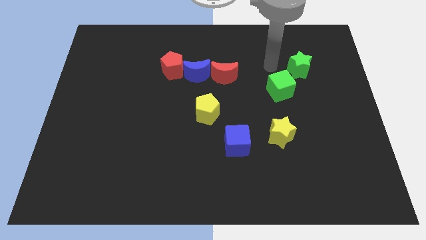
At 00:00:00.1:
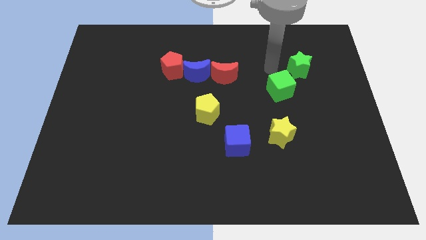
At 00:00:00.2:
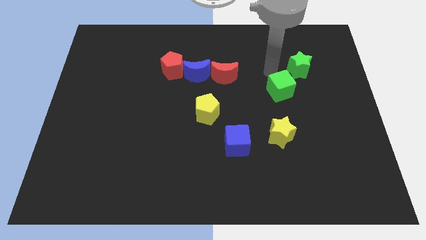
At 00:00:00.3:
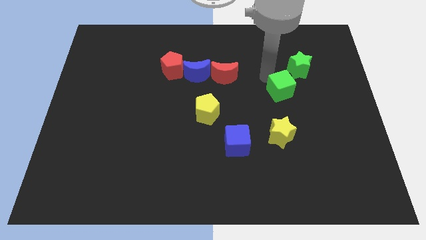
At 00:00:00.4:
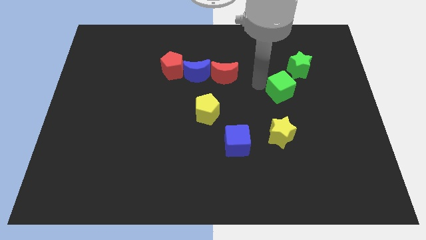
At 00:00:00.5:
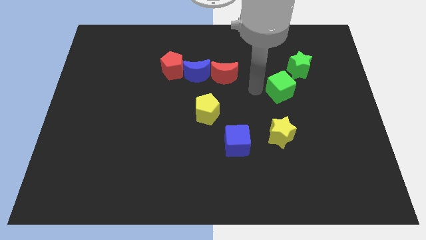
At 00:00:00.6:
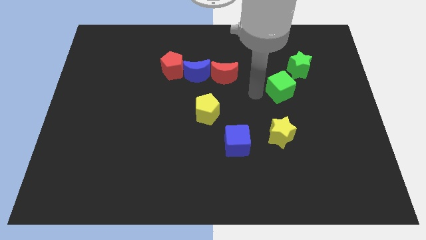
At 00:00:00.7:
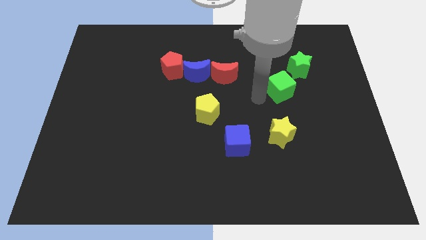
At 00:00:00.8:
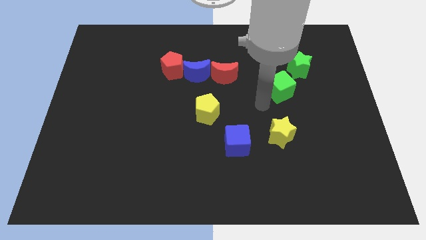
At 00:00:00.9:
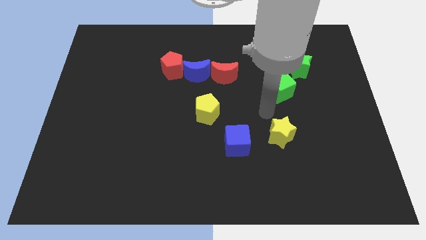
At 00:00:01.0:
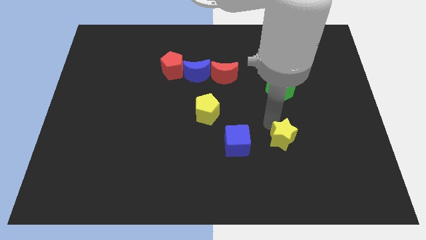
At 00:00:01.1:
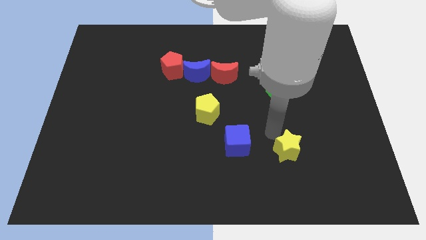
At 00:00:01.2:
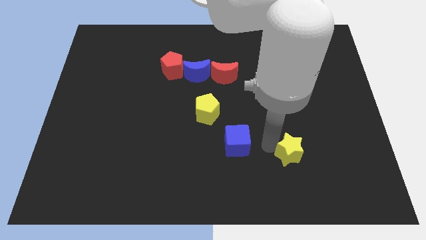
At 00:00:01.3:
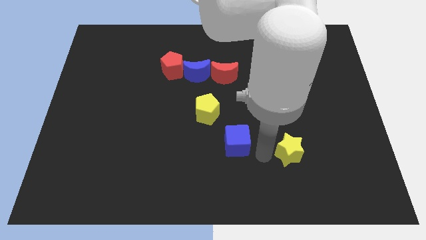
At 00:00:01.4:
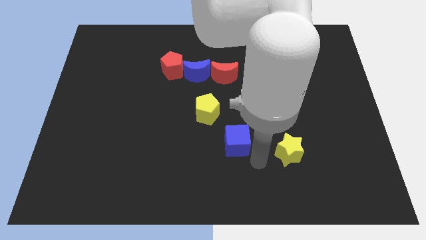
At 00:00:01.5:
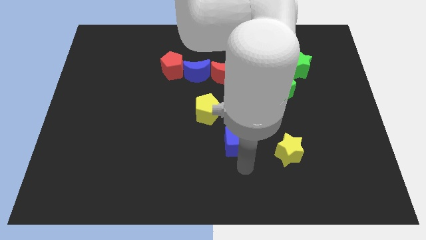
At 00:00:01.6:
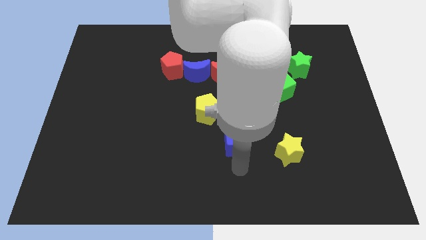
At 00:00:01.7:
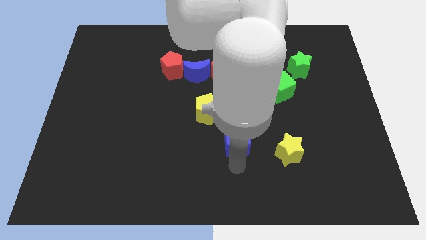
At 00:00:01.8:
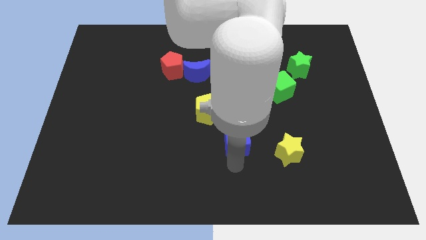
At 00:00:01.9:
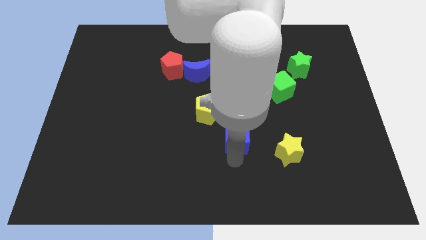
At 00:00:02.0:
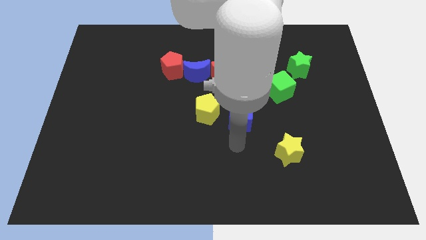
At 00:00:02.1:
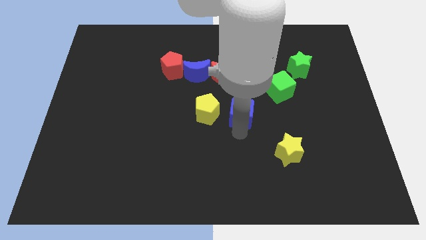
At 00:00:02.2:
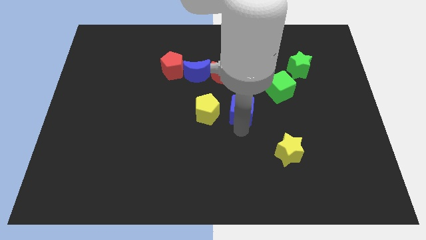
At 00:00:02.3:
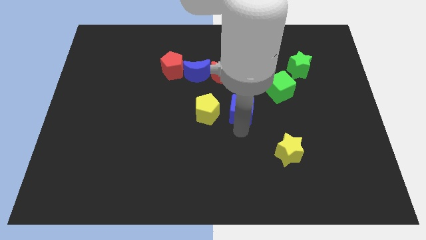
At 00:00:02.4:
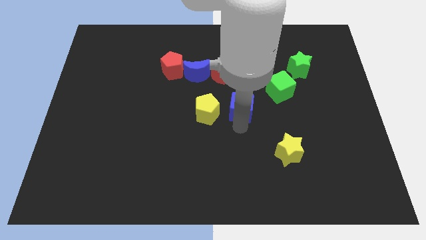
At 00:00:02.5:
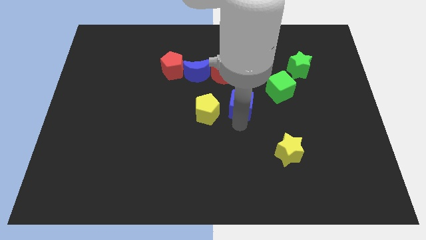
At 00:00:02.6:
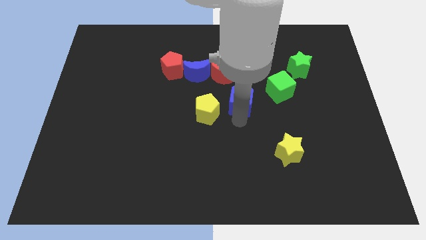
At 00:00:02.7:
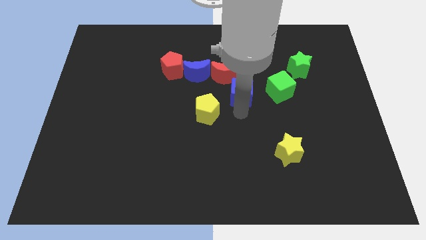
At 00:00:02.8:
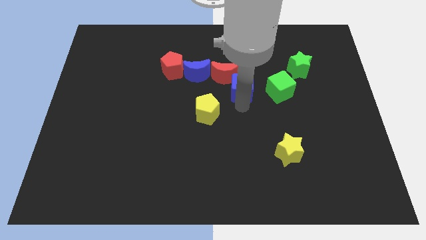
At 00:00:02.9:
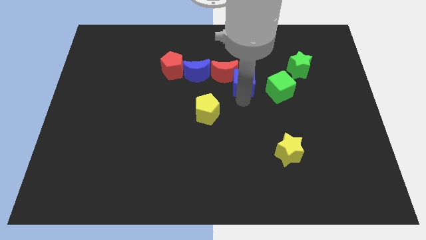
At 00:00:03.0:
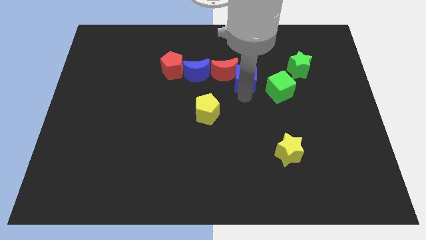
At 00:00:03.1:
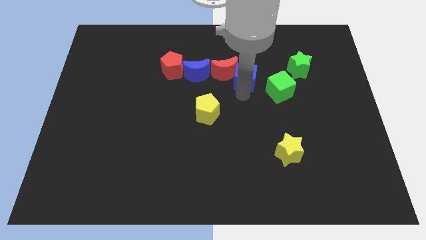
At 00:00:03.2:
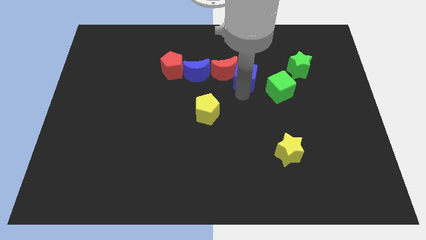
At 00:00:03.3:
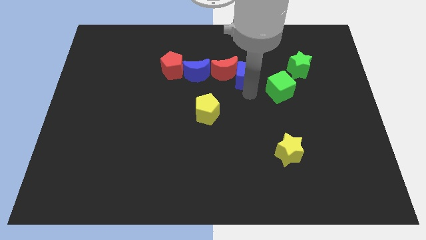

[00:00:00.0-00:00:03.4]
move the blue cube to the right side of the red crescent

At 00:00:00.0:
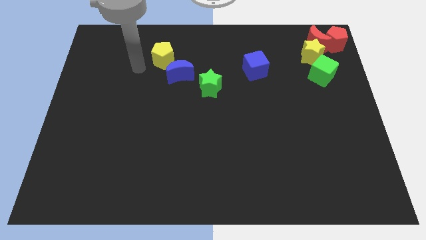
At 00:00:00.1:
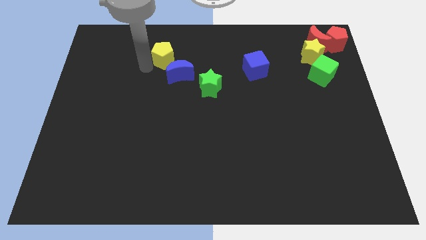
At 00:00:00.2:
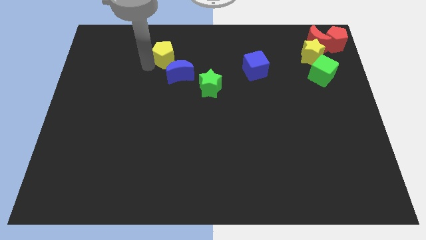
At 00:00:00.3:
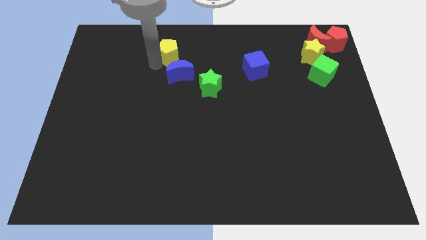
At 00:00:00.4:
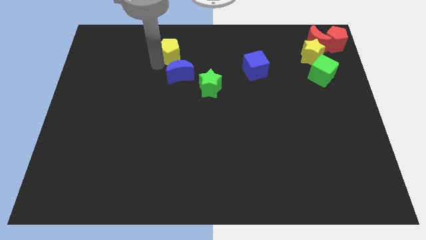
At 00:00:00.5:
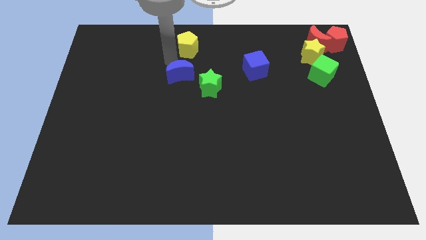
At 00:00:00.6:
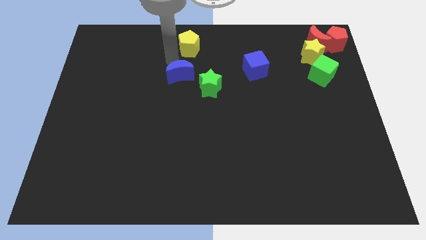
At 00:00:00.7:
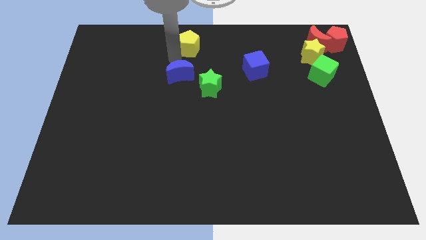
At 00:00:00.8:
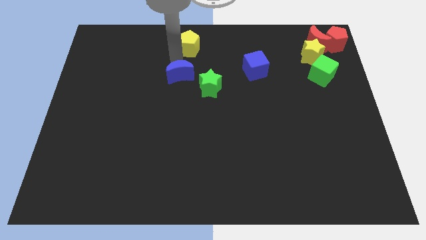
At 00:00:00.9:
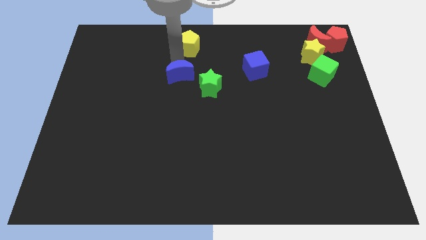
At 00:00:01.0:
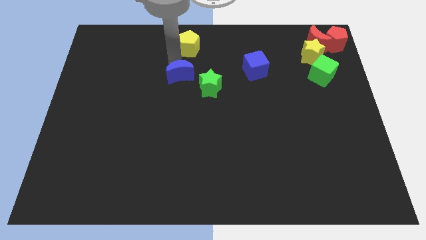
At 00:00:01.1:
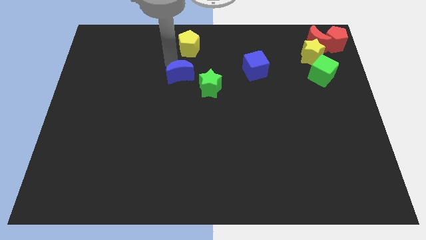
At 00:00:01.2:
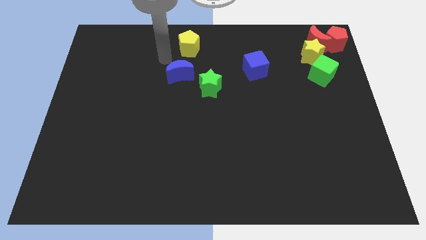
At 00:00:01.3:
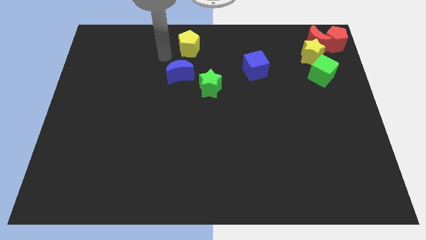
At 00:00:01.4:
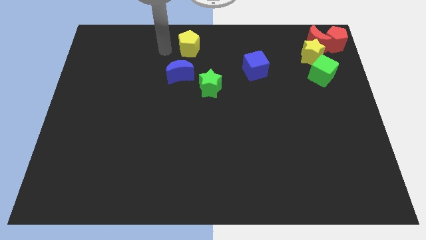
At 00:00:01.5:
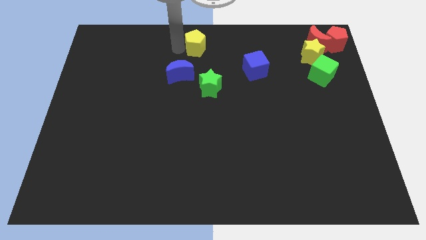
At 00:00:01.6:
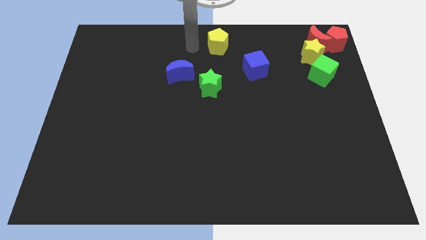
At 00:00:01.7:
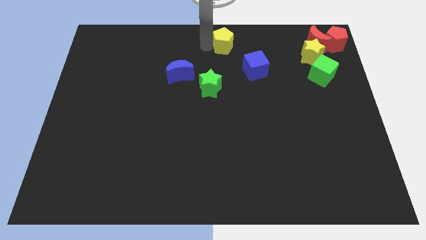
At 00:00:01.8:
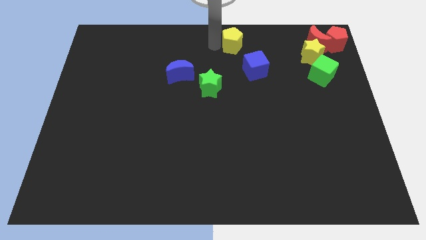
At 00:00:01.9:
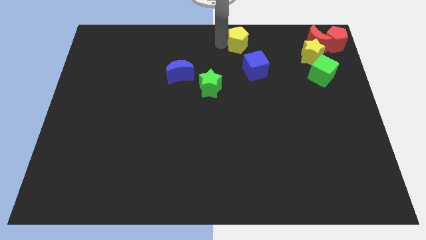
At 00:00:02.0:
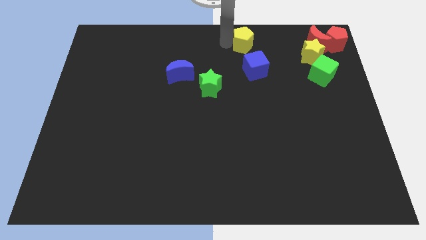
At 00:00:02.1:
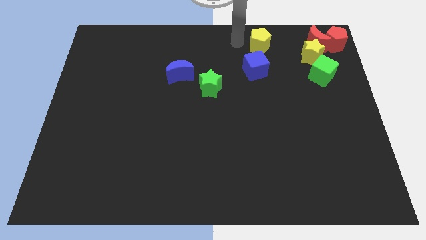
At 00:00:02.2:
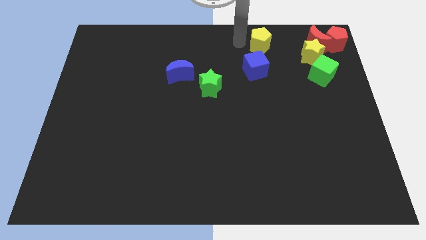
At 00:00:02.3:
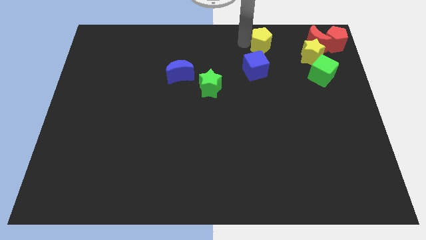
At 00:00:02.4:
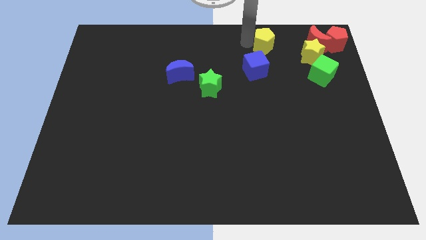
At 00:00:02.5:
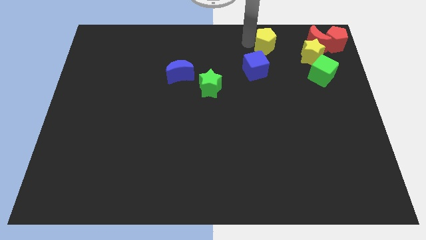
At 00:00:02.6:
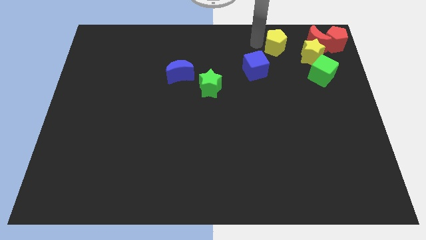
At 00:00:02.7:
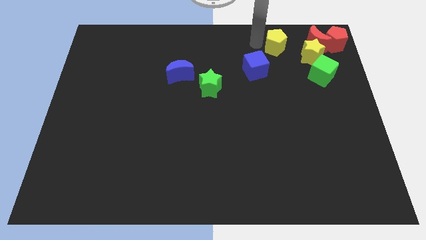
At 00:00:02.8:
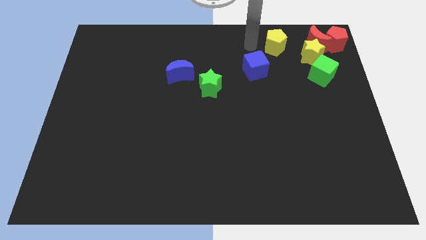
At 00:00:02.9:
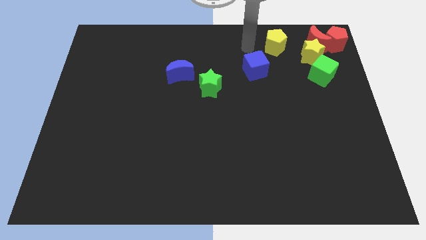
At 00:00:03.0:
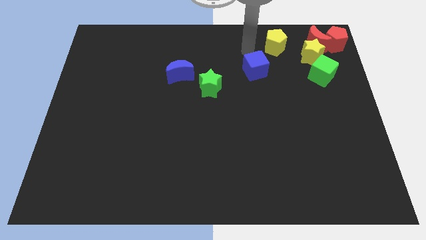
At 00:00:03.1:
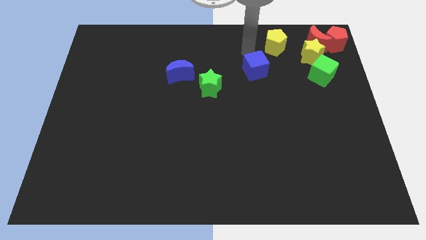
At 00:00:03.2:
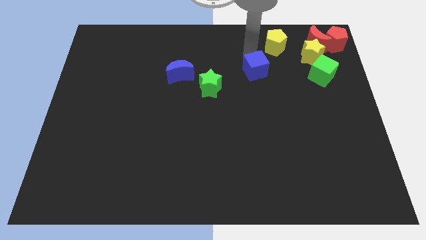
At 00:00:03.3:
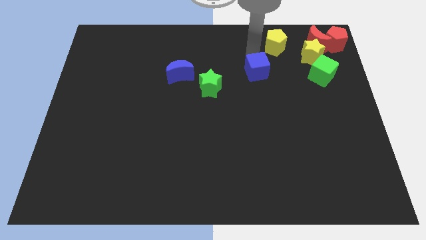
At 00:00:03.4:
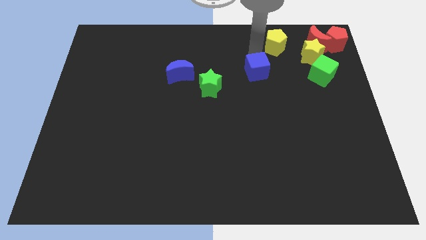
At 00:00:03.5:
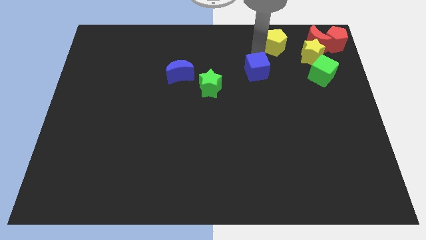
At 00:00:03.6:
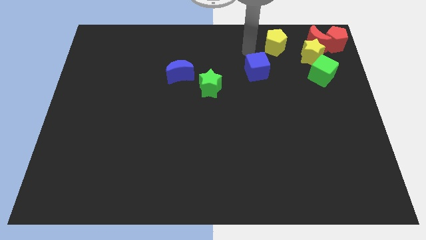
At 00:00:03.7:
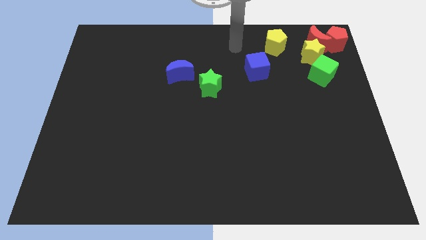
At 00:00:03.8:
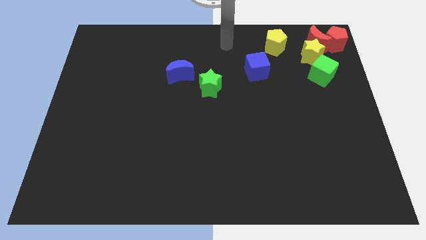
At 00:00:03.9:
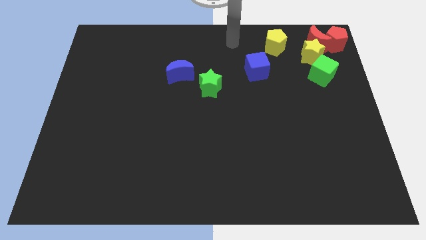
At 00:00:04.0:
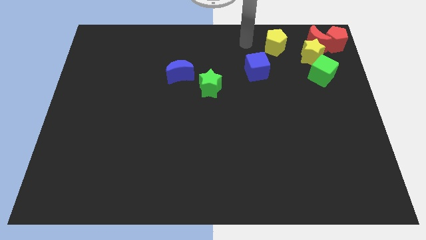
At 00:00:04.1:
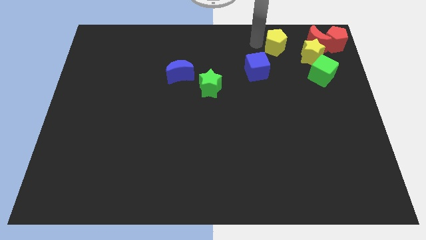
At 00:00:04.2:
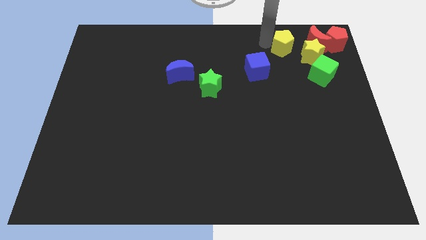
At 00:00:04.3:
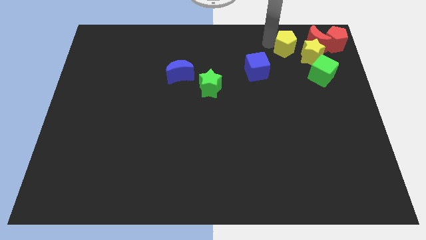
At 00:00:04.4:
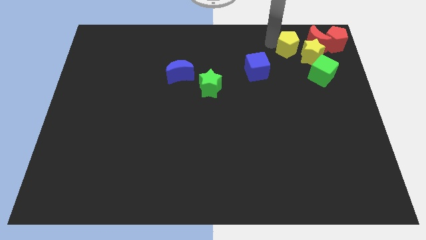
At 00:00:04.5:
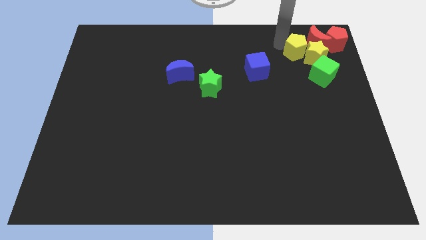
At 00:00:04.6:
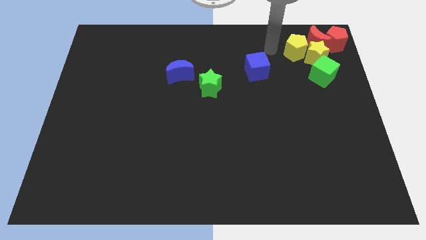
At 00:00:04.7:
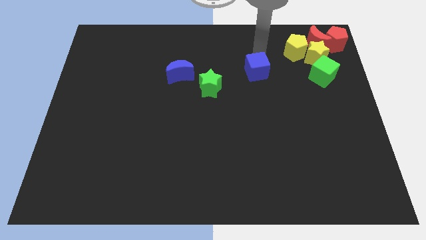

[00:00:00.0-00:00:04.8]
push the yellow pentagon into yellow star

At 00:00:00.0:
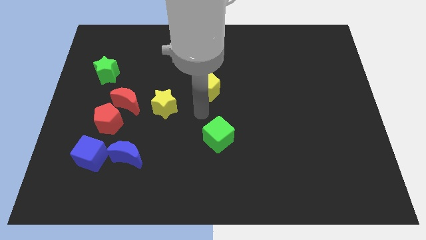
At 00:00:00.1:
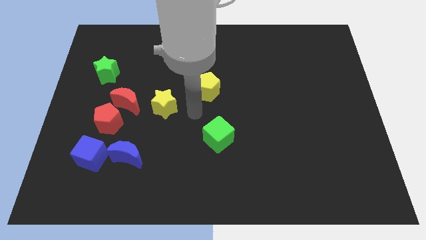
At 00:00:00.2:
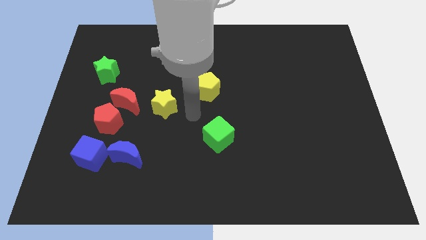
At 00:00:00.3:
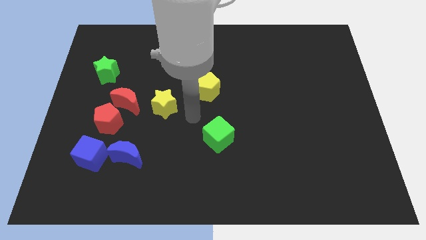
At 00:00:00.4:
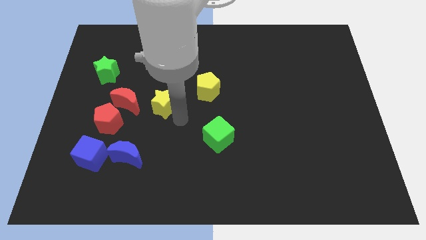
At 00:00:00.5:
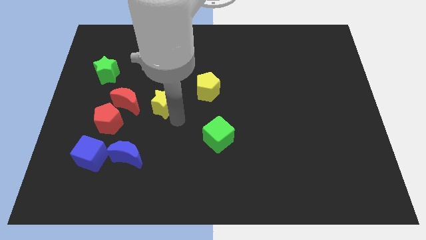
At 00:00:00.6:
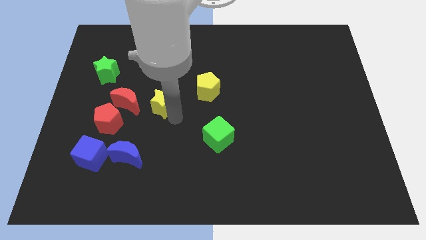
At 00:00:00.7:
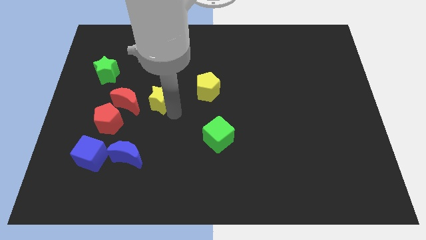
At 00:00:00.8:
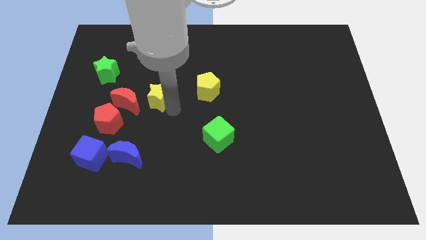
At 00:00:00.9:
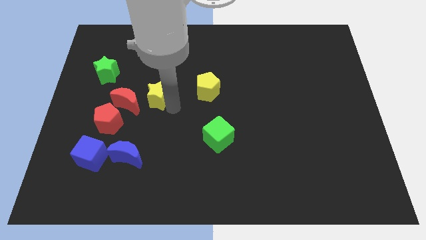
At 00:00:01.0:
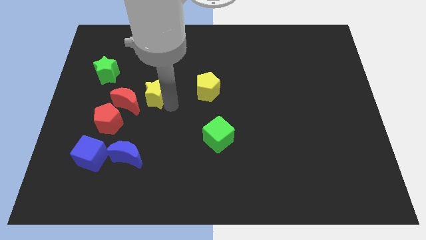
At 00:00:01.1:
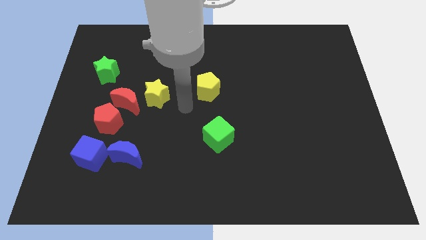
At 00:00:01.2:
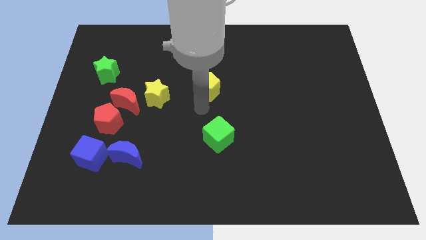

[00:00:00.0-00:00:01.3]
put the yellow star at the top right side of the red moon
